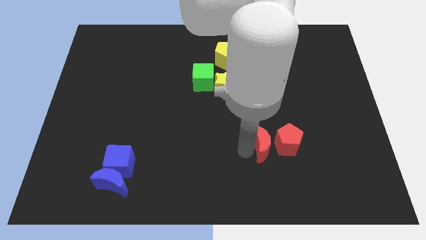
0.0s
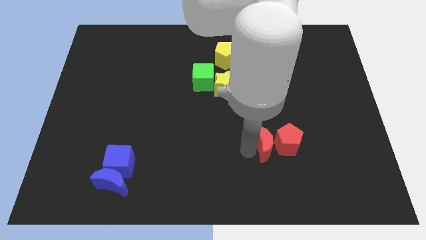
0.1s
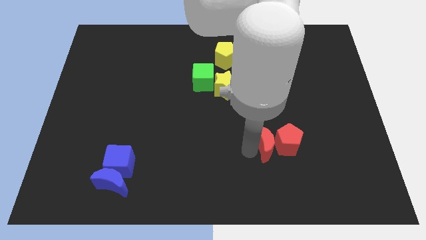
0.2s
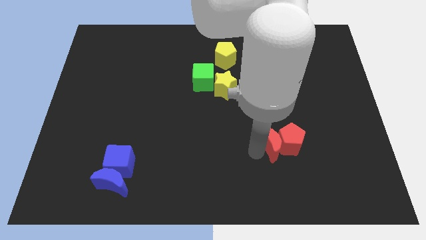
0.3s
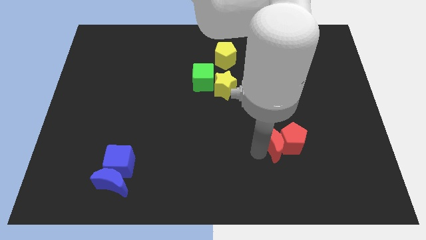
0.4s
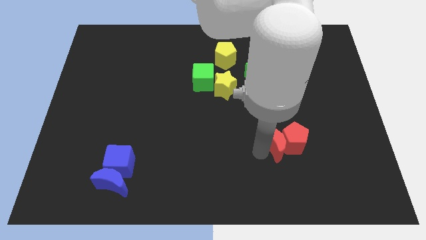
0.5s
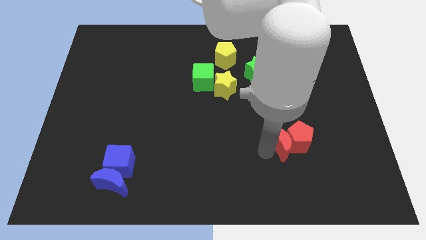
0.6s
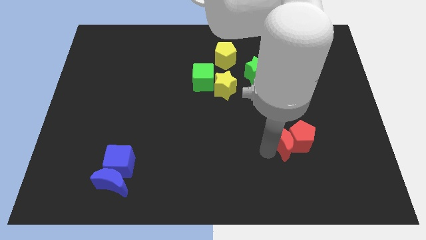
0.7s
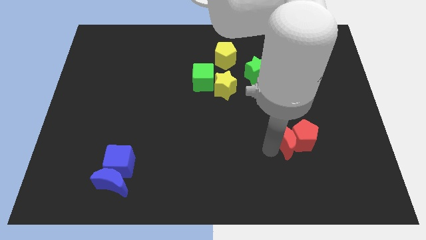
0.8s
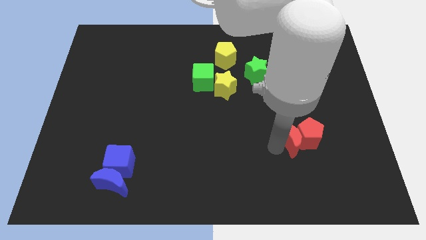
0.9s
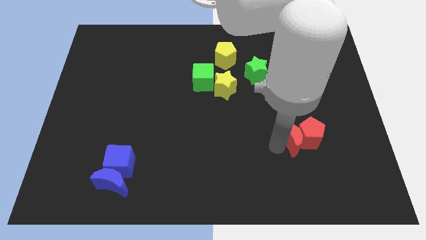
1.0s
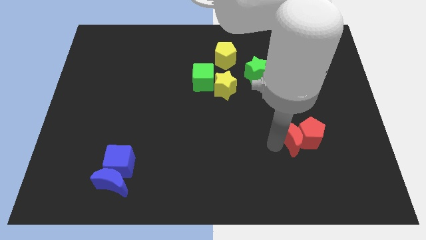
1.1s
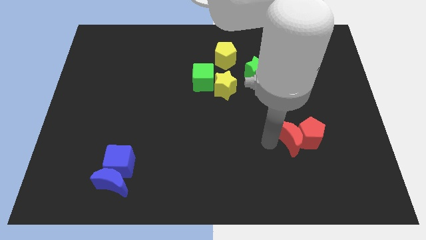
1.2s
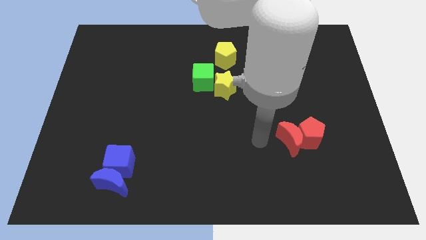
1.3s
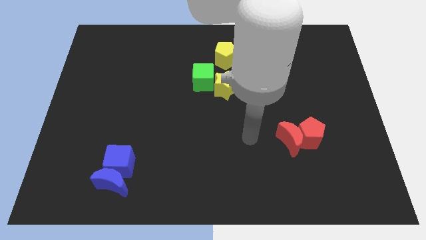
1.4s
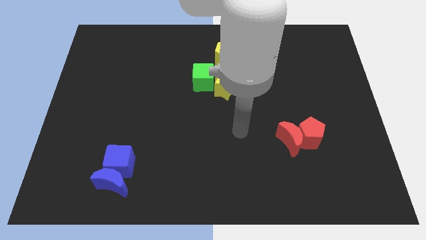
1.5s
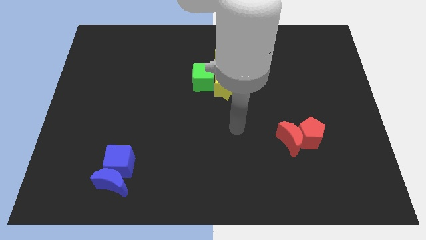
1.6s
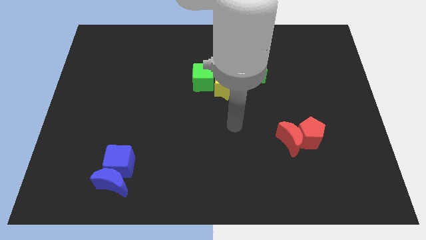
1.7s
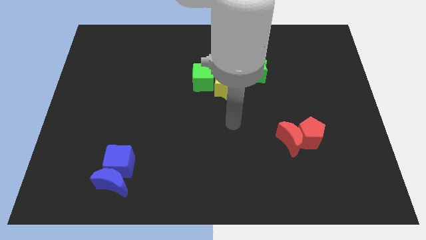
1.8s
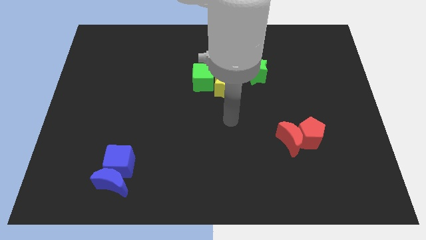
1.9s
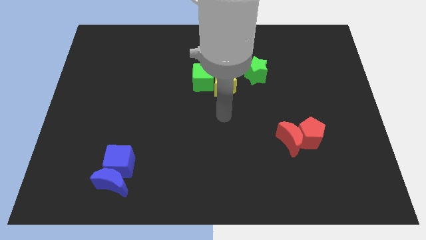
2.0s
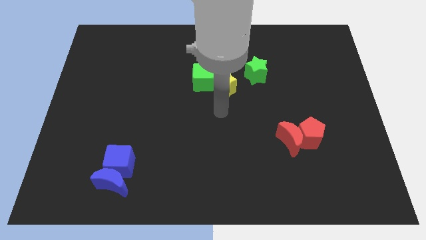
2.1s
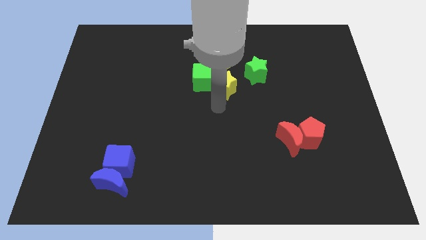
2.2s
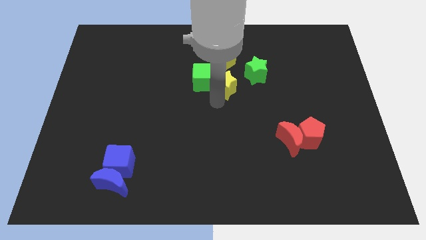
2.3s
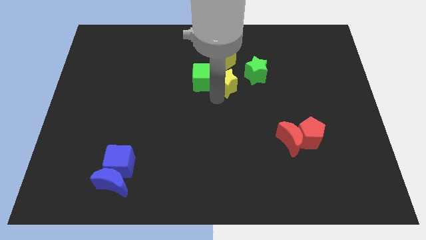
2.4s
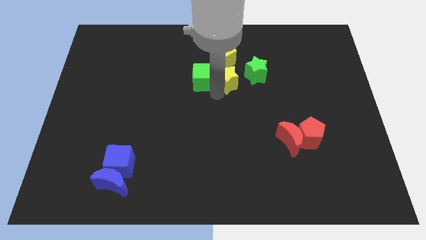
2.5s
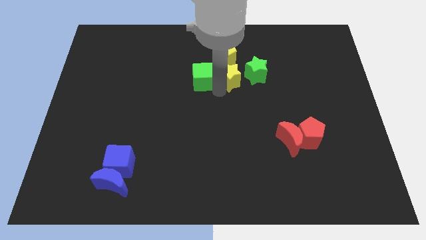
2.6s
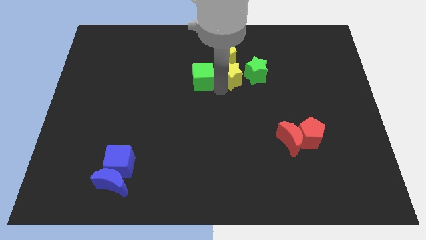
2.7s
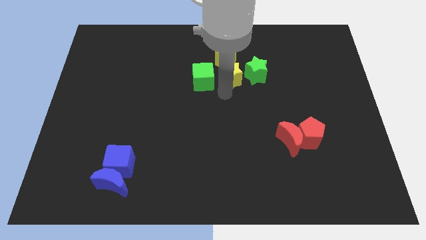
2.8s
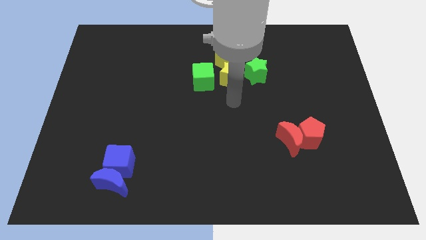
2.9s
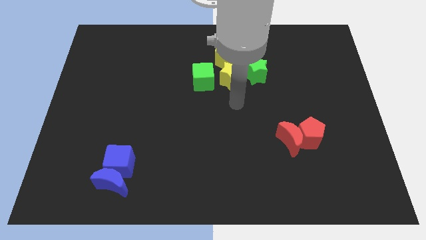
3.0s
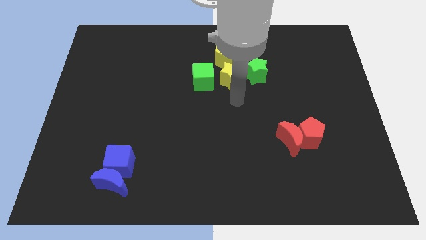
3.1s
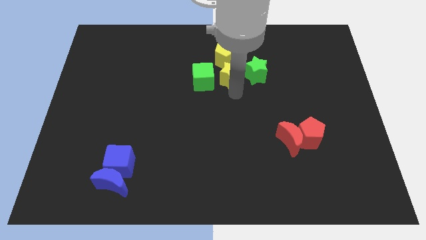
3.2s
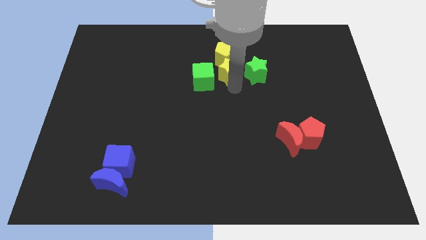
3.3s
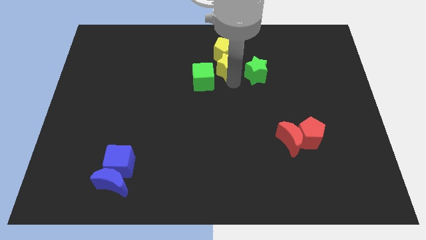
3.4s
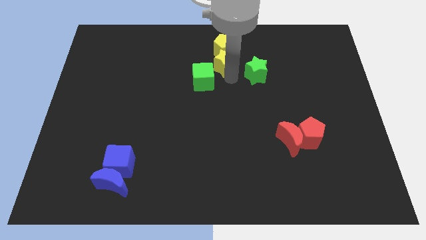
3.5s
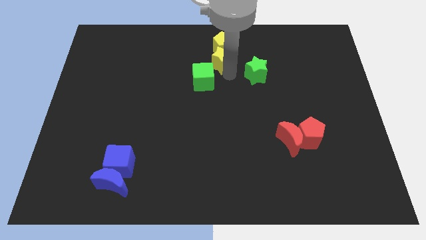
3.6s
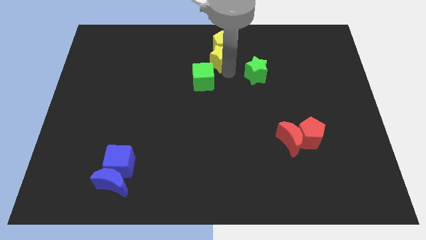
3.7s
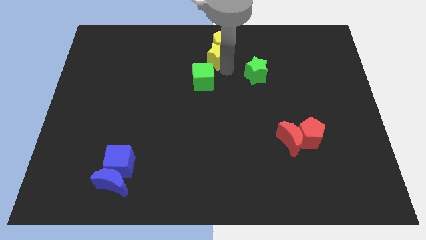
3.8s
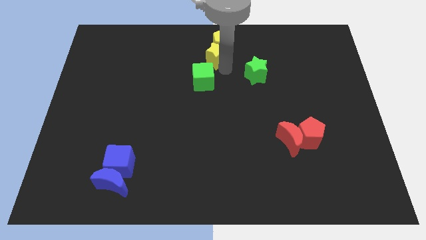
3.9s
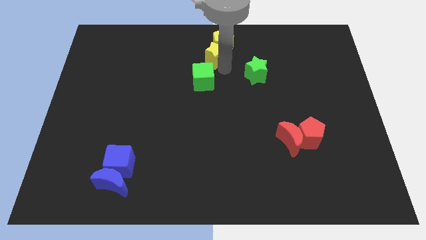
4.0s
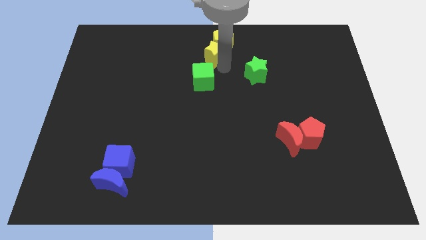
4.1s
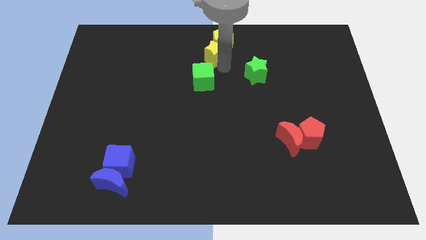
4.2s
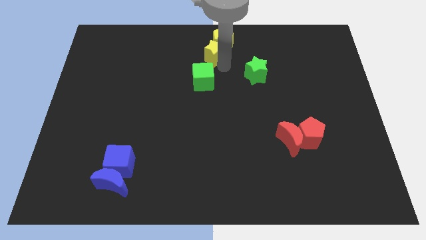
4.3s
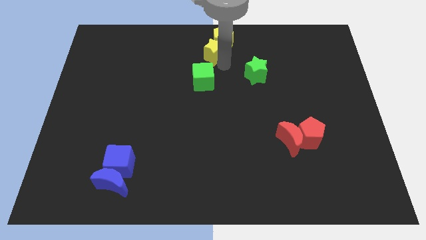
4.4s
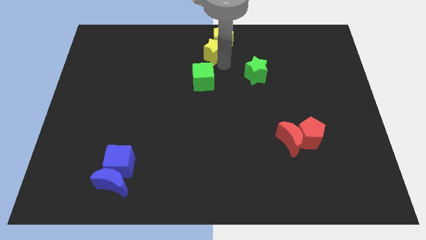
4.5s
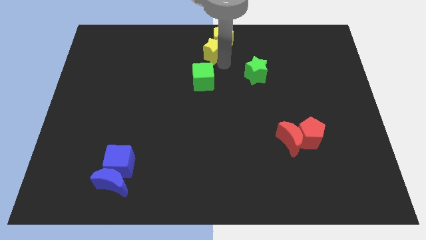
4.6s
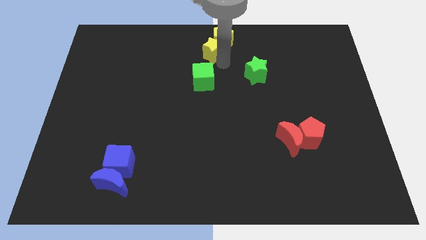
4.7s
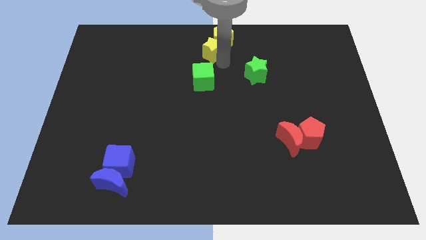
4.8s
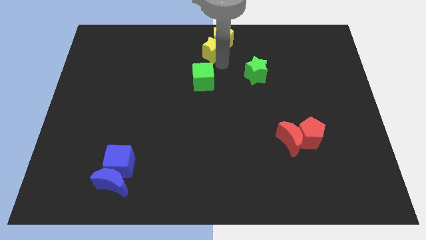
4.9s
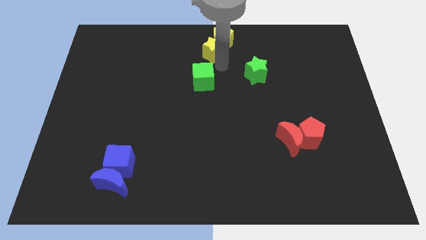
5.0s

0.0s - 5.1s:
push the yellow star into the yellow pentagon

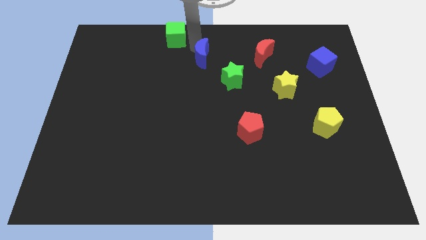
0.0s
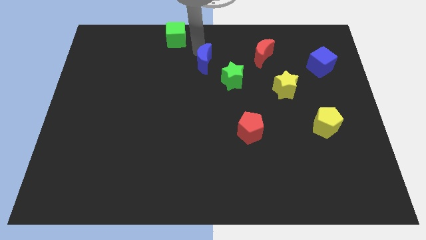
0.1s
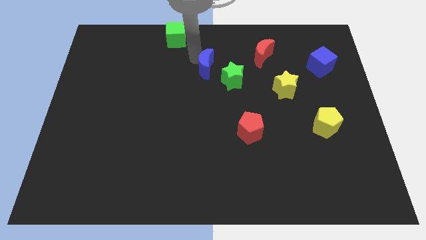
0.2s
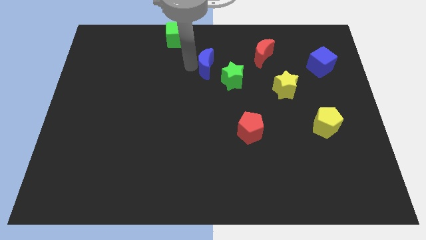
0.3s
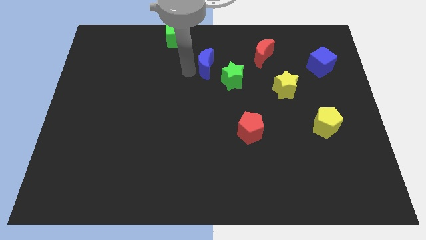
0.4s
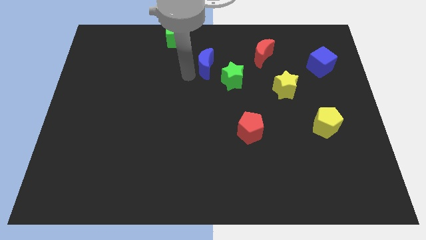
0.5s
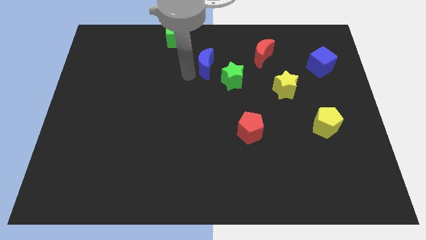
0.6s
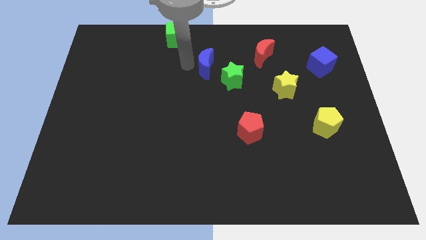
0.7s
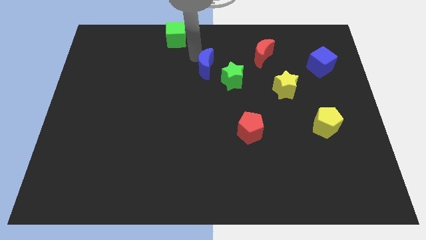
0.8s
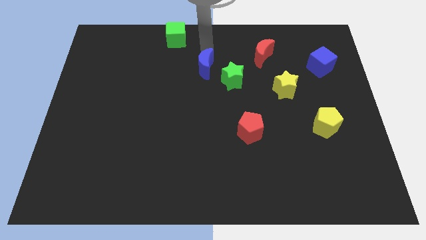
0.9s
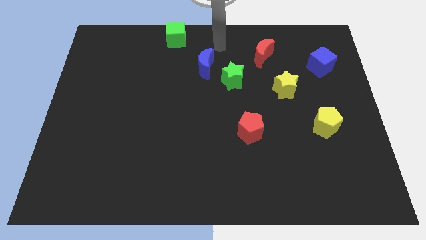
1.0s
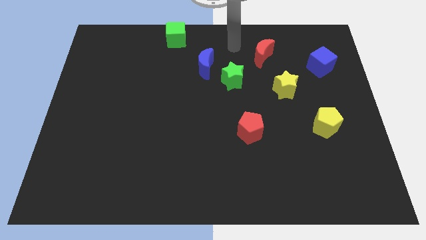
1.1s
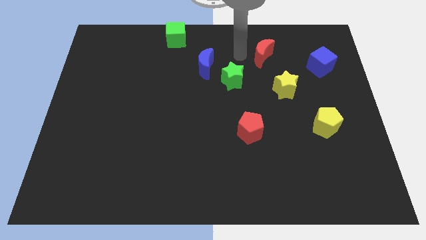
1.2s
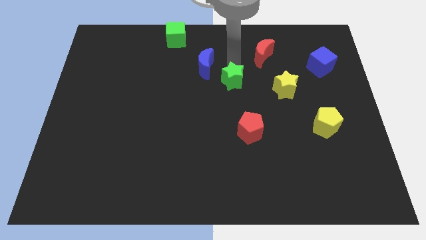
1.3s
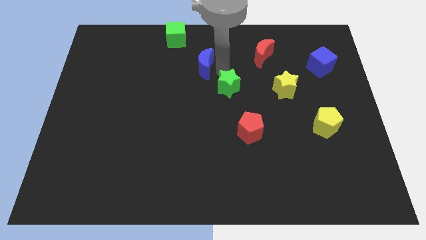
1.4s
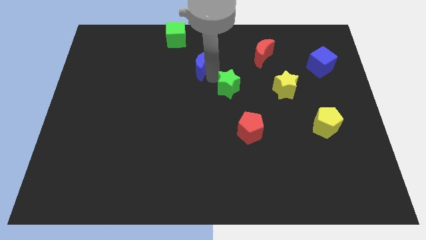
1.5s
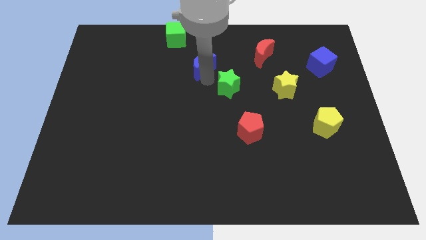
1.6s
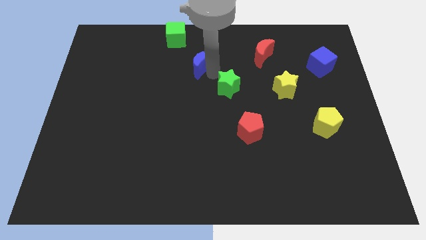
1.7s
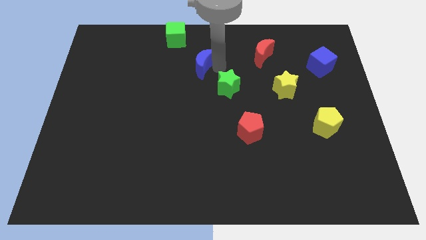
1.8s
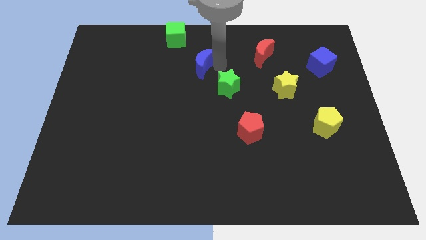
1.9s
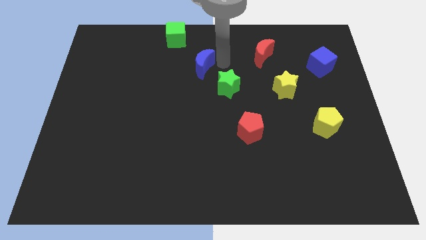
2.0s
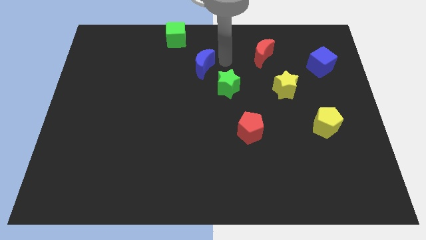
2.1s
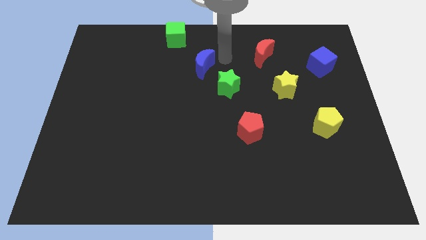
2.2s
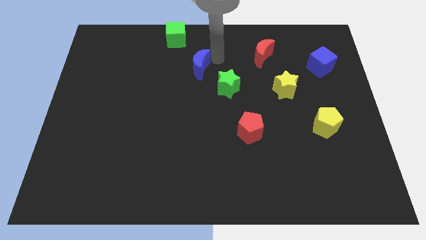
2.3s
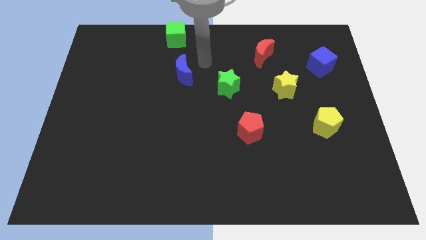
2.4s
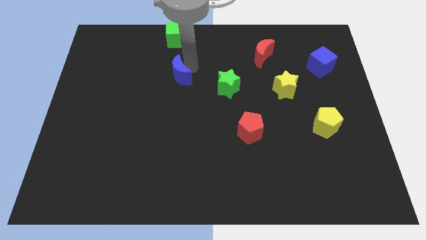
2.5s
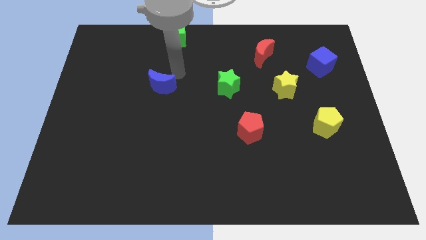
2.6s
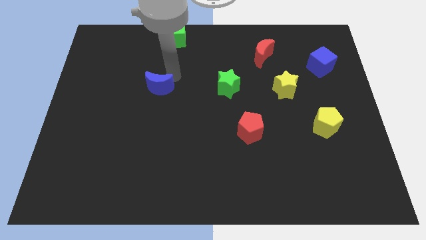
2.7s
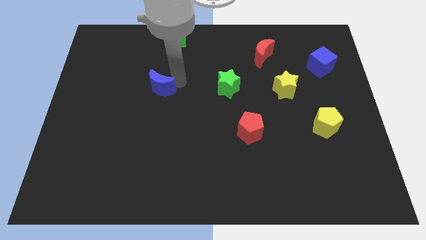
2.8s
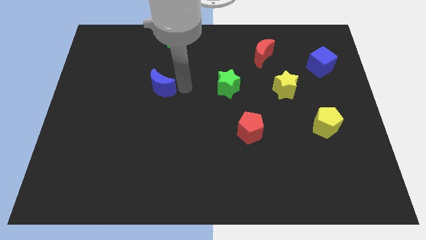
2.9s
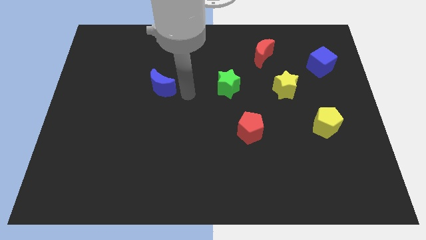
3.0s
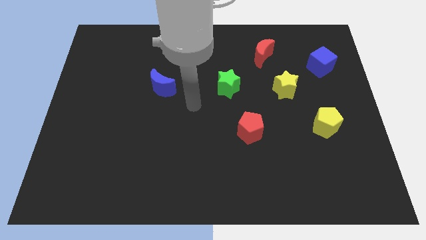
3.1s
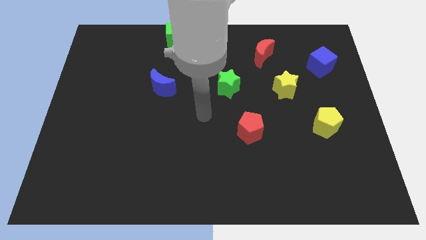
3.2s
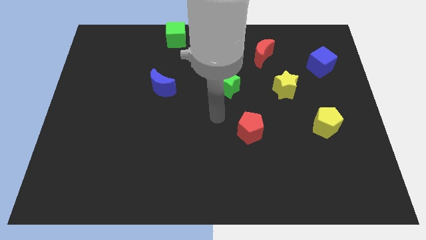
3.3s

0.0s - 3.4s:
move the blue crescent diagonal to the left of green star

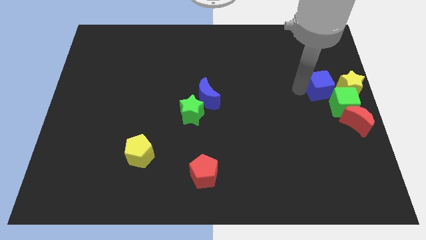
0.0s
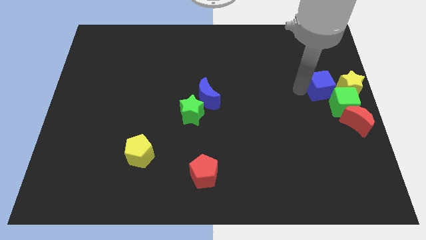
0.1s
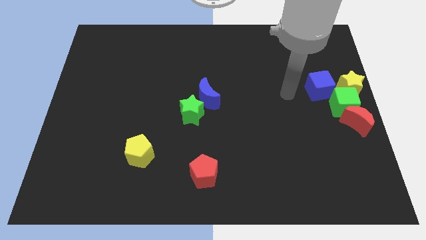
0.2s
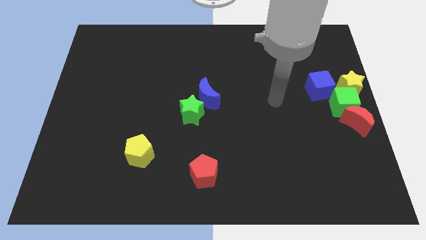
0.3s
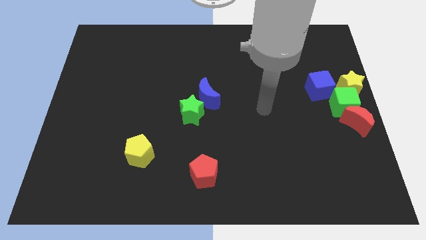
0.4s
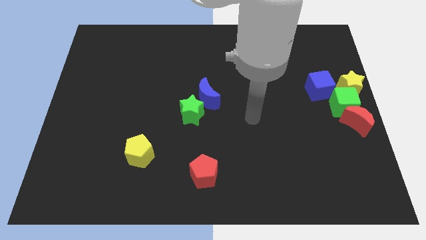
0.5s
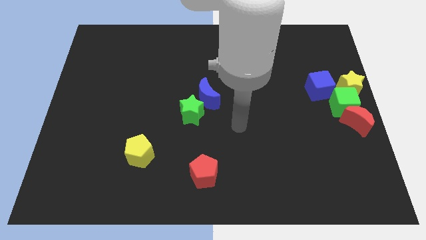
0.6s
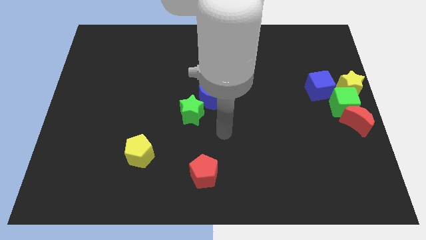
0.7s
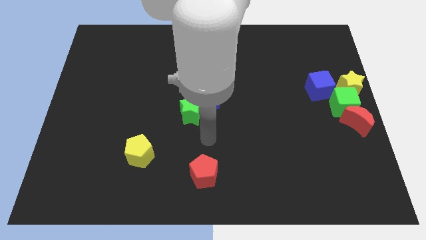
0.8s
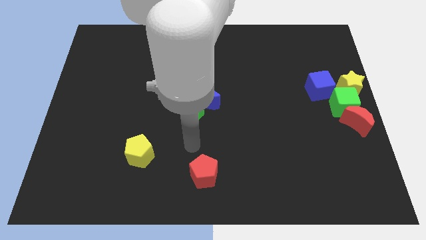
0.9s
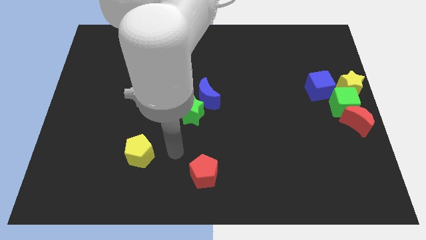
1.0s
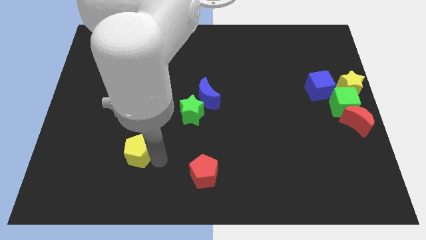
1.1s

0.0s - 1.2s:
move the arm away from the blue cube
